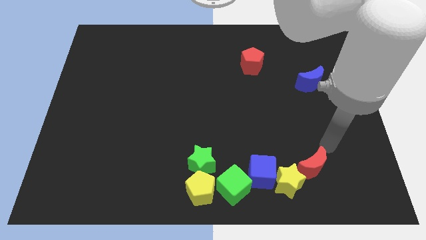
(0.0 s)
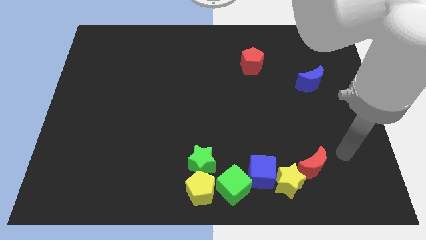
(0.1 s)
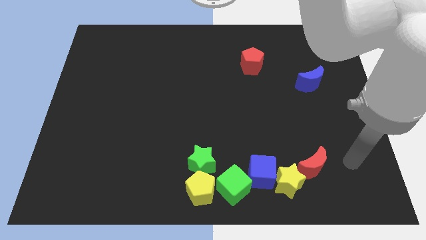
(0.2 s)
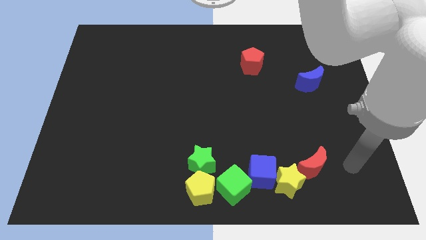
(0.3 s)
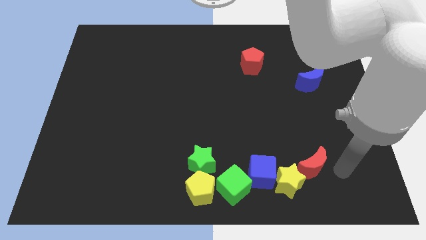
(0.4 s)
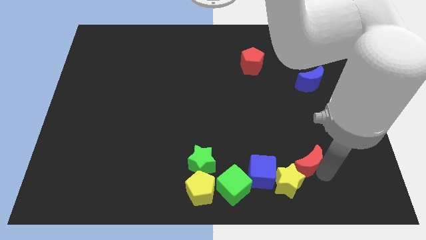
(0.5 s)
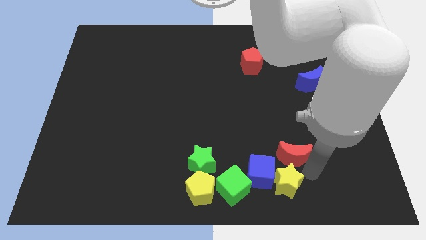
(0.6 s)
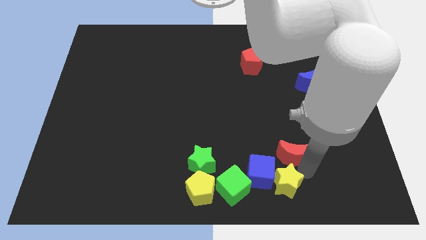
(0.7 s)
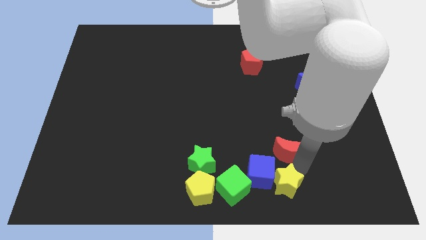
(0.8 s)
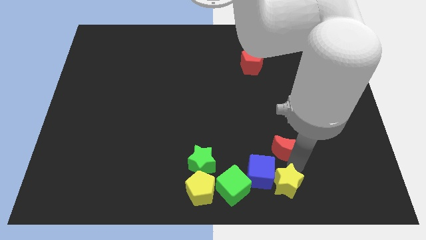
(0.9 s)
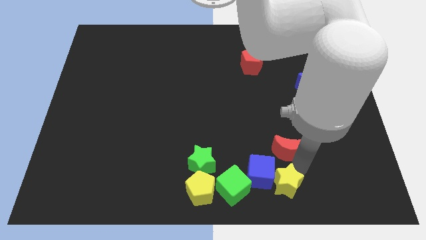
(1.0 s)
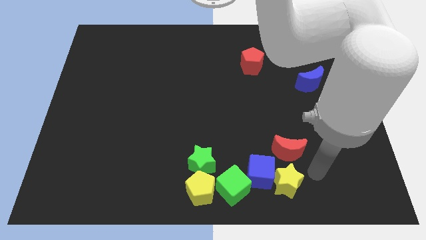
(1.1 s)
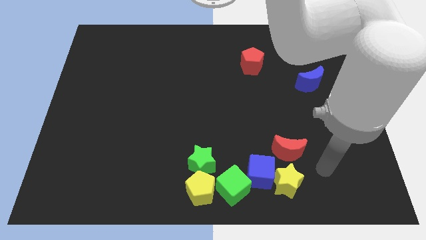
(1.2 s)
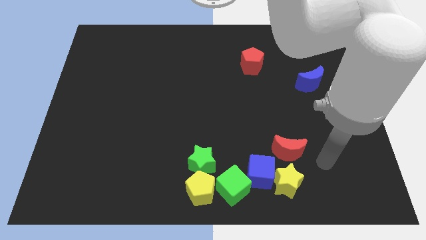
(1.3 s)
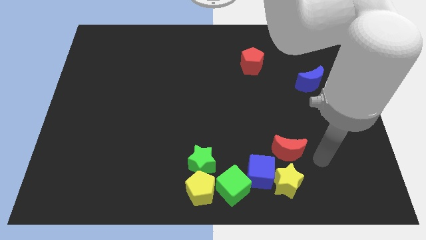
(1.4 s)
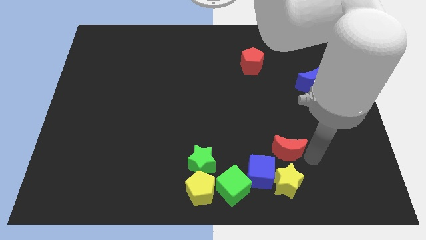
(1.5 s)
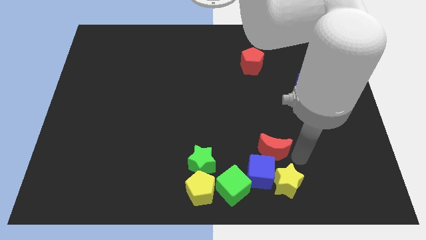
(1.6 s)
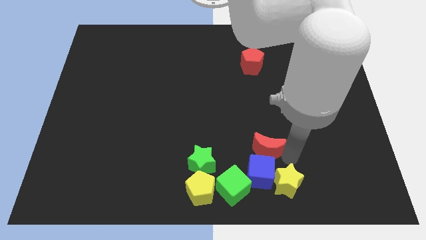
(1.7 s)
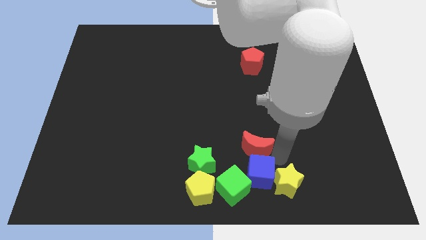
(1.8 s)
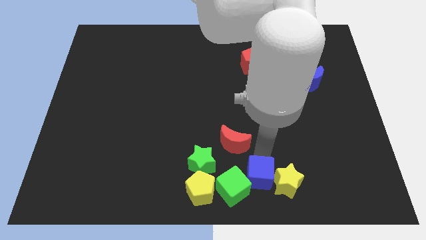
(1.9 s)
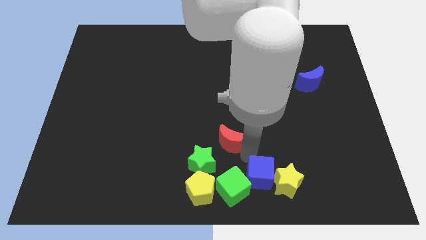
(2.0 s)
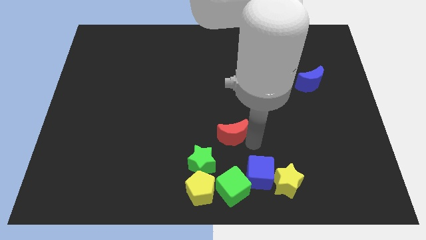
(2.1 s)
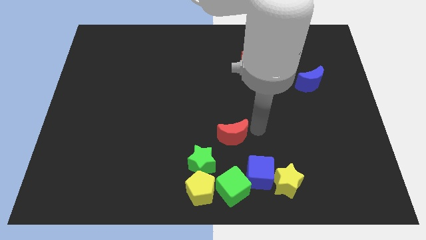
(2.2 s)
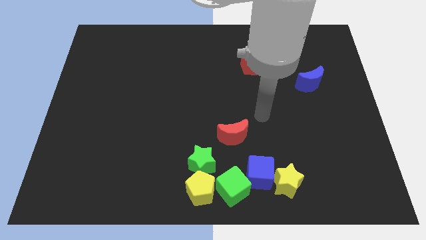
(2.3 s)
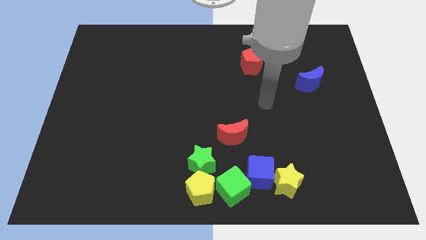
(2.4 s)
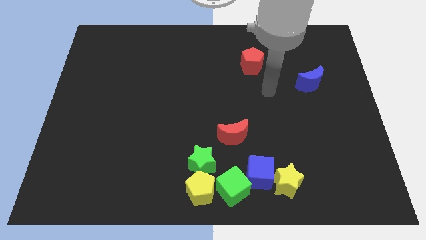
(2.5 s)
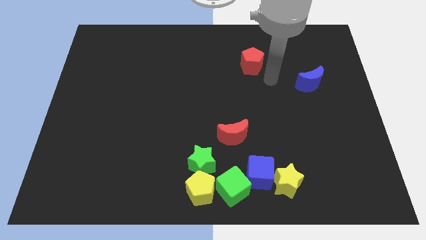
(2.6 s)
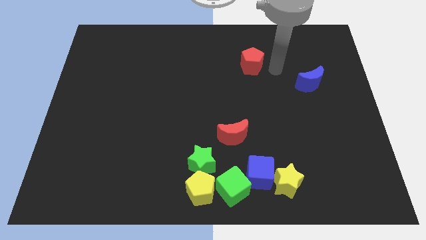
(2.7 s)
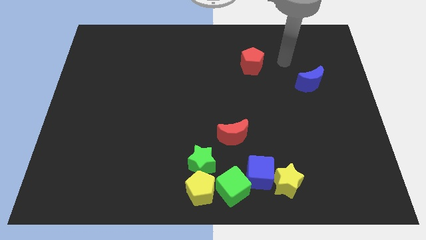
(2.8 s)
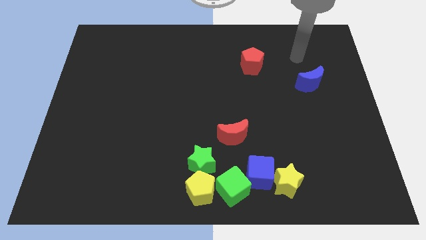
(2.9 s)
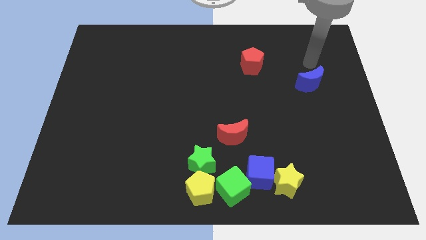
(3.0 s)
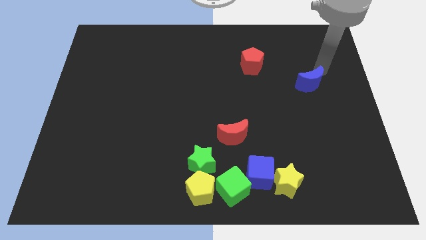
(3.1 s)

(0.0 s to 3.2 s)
move red moon above green cube

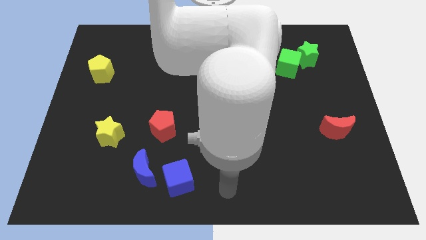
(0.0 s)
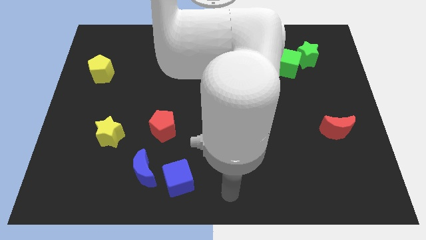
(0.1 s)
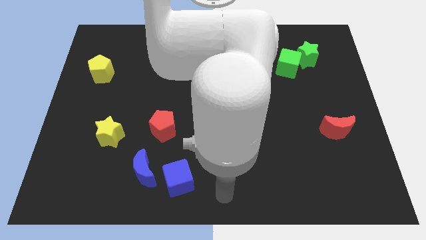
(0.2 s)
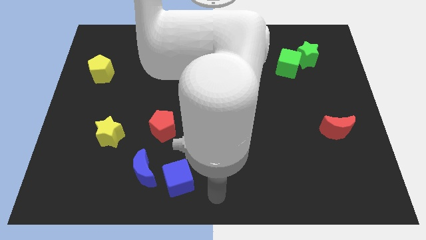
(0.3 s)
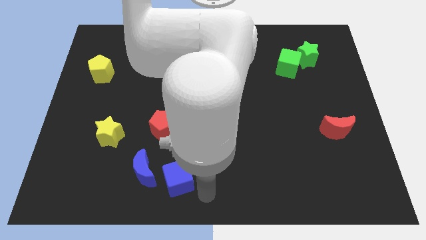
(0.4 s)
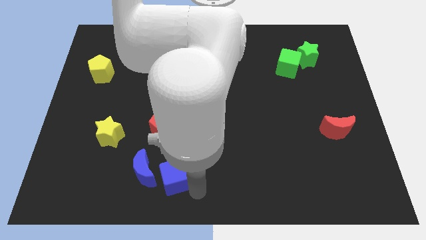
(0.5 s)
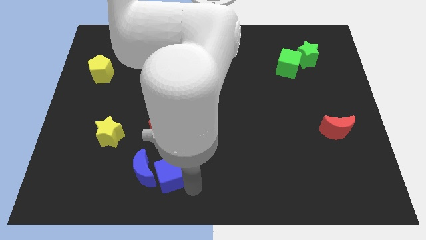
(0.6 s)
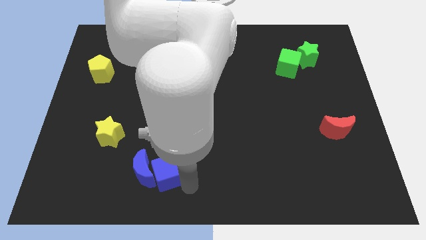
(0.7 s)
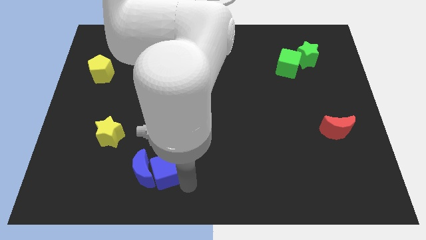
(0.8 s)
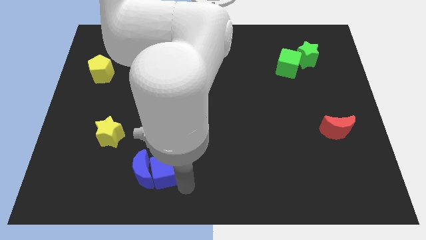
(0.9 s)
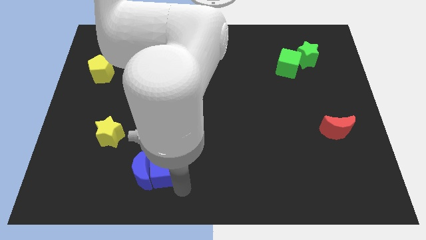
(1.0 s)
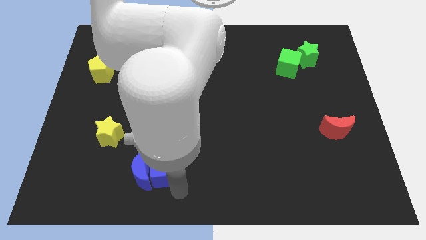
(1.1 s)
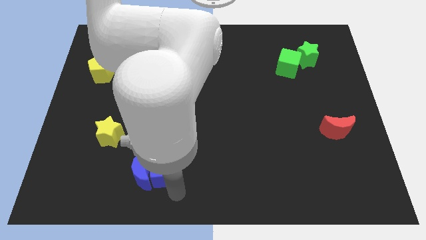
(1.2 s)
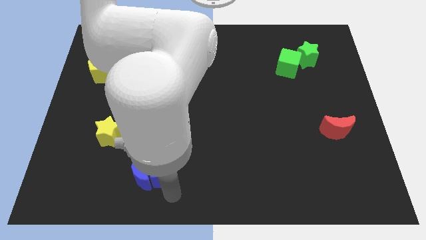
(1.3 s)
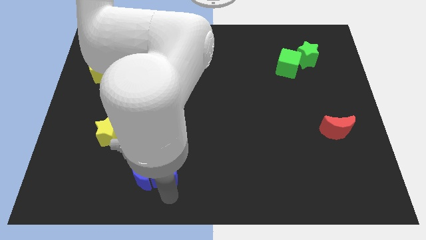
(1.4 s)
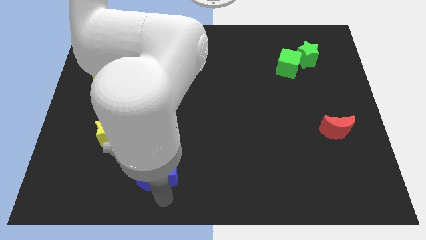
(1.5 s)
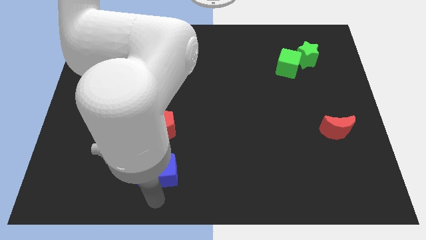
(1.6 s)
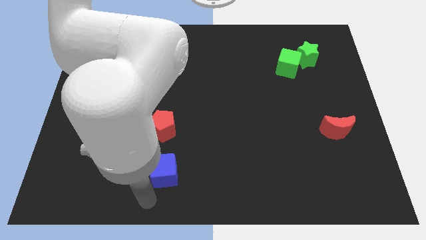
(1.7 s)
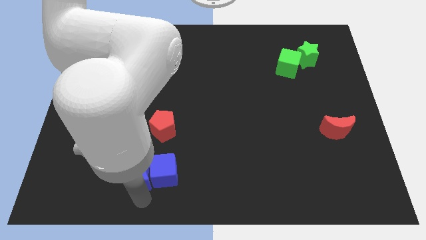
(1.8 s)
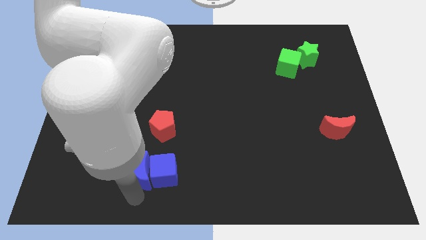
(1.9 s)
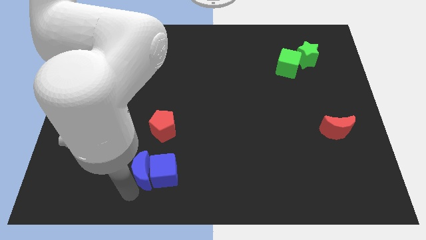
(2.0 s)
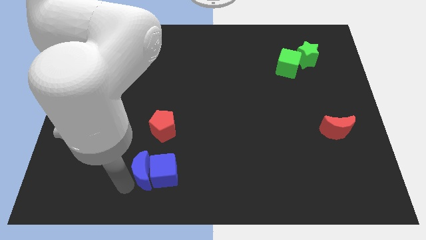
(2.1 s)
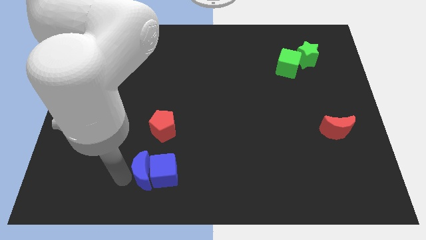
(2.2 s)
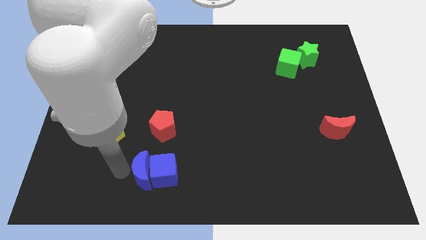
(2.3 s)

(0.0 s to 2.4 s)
push the blue cube close to blue moon

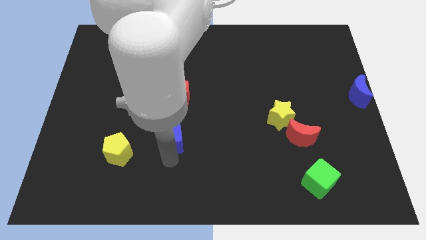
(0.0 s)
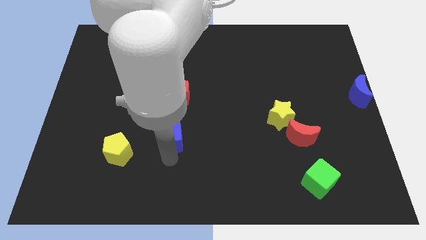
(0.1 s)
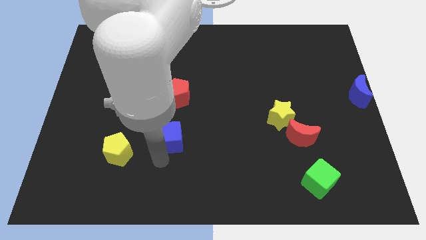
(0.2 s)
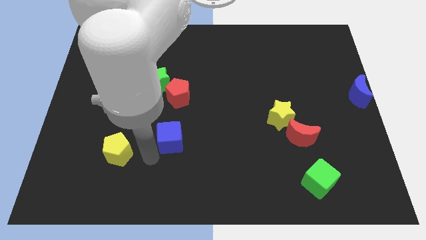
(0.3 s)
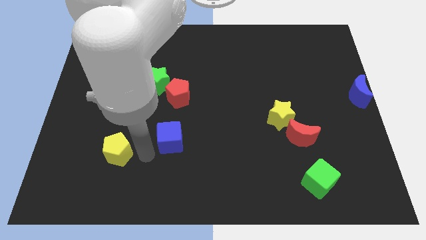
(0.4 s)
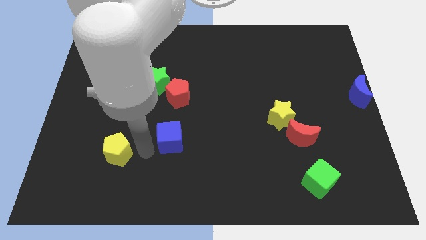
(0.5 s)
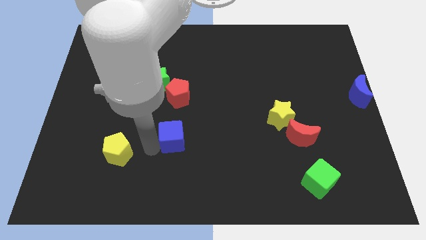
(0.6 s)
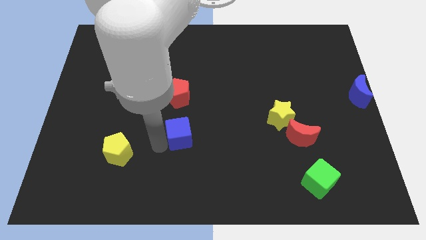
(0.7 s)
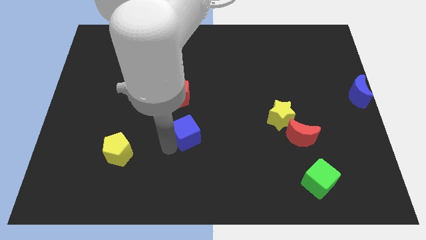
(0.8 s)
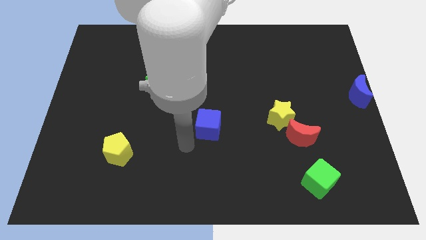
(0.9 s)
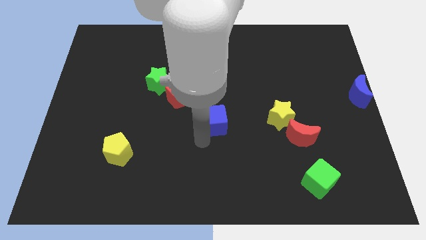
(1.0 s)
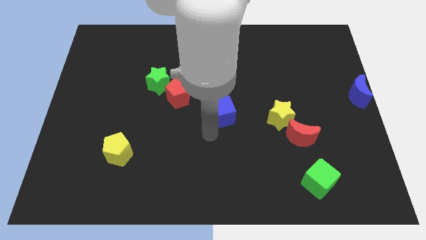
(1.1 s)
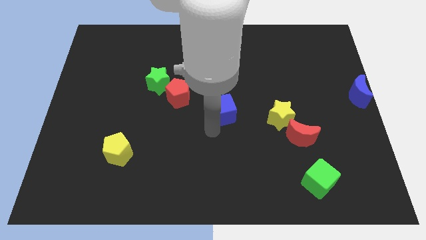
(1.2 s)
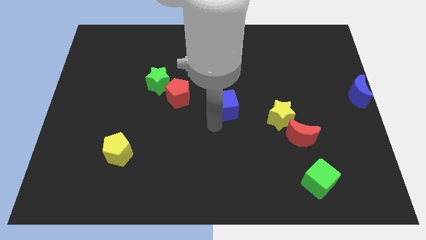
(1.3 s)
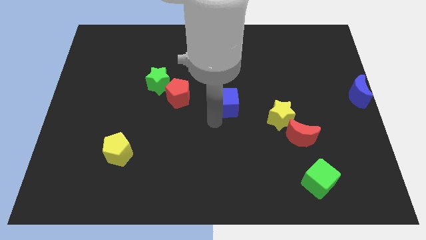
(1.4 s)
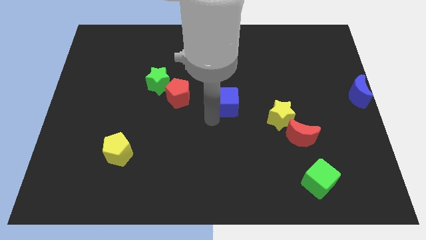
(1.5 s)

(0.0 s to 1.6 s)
place the blue cube beside the red pentagon

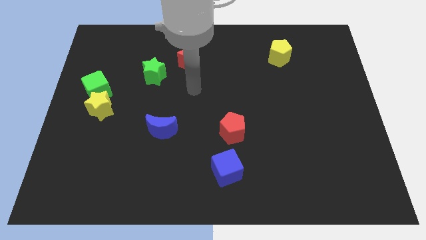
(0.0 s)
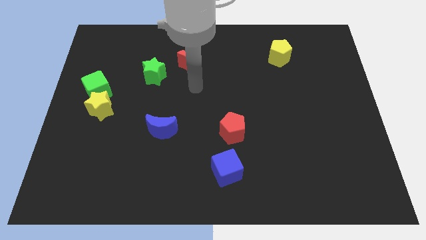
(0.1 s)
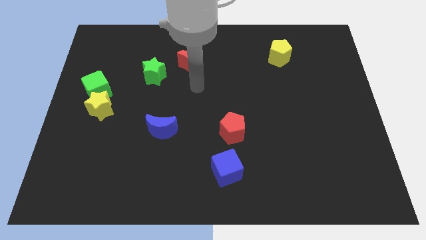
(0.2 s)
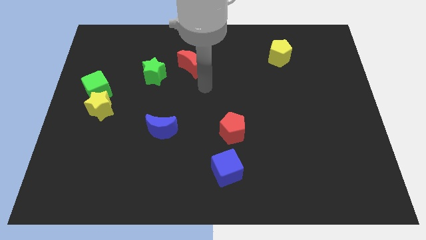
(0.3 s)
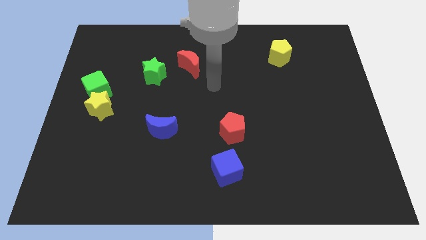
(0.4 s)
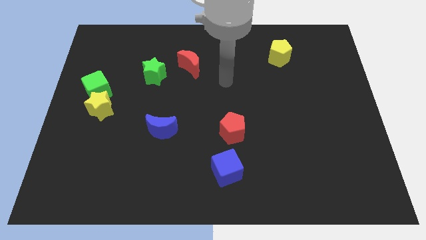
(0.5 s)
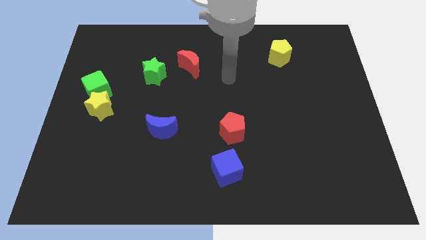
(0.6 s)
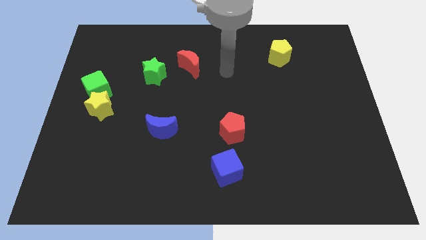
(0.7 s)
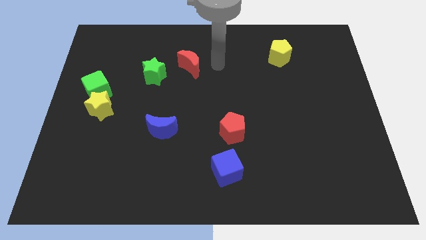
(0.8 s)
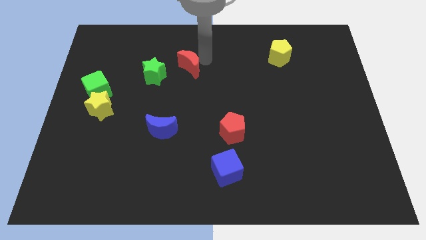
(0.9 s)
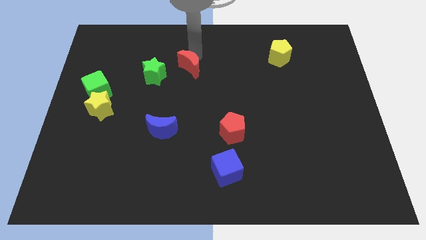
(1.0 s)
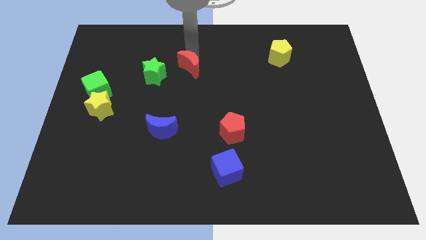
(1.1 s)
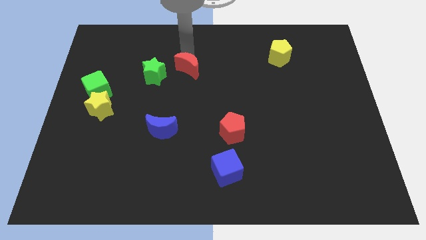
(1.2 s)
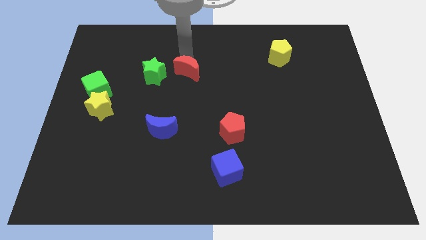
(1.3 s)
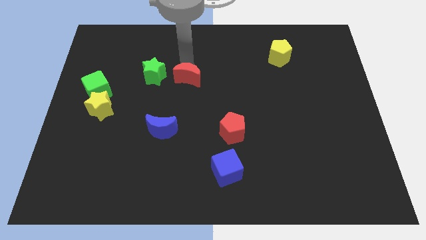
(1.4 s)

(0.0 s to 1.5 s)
slide the red crescent parallel right to the green star

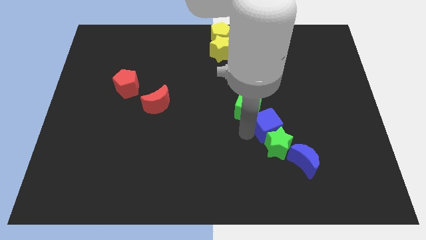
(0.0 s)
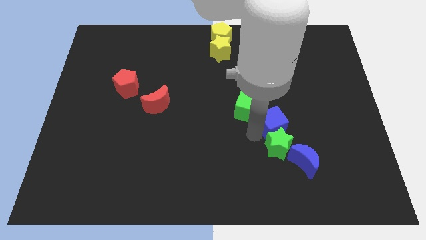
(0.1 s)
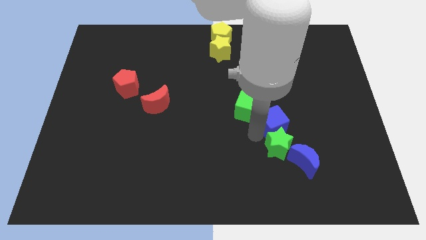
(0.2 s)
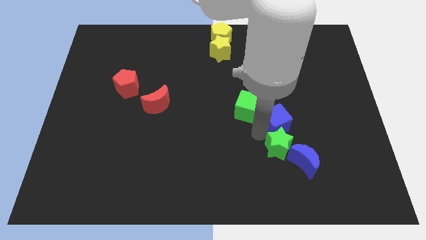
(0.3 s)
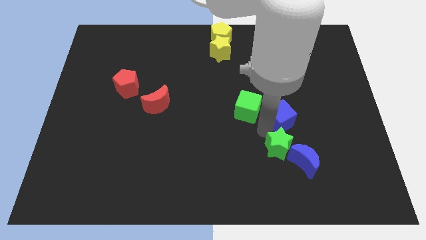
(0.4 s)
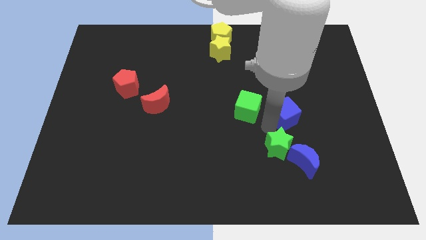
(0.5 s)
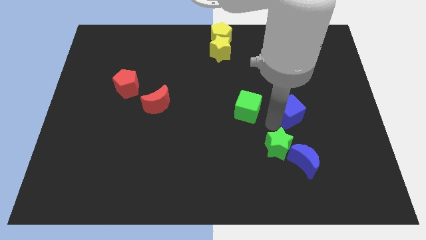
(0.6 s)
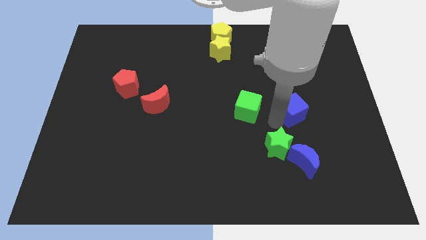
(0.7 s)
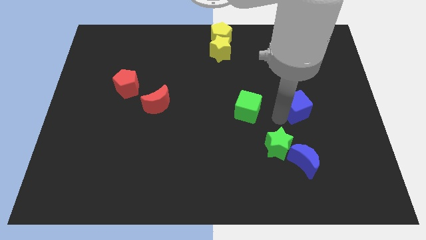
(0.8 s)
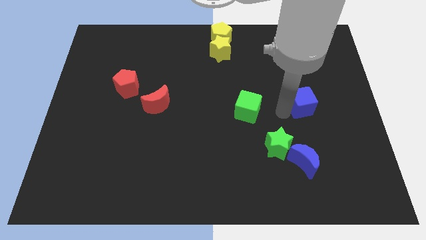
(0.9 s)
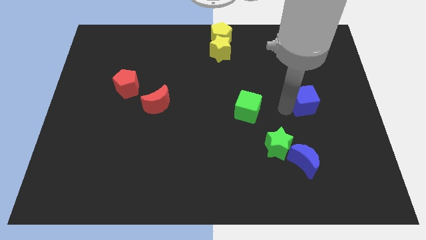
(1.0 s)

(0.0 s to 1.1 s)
push the blue cube to the right of the green cube
